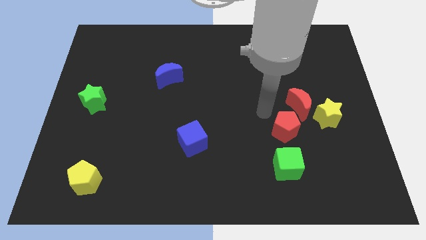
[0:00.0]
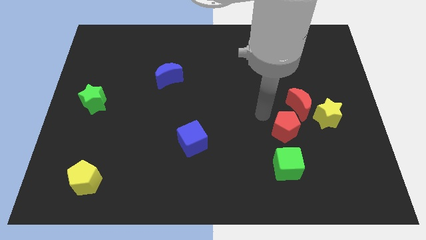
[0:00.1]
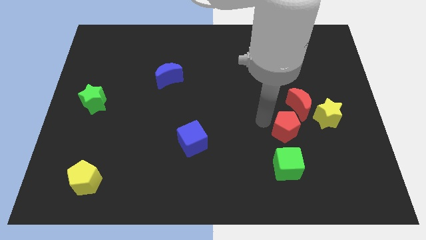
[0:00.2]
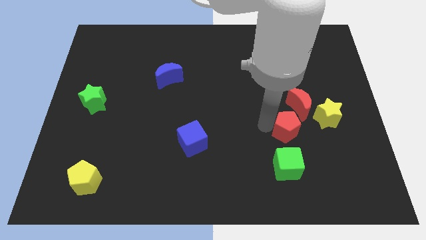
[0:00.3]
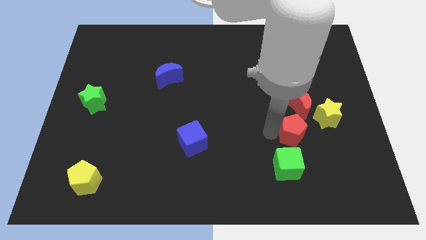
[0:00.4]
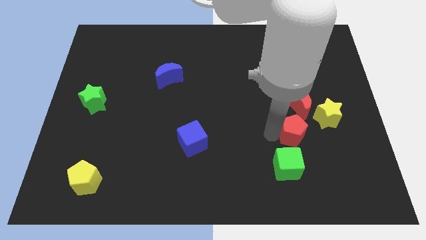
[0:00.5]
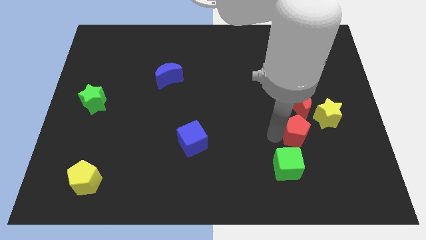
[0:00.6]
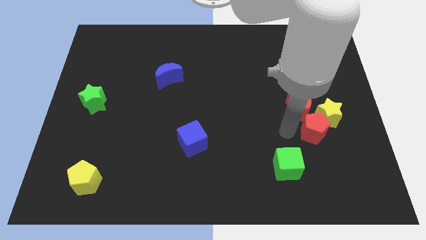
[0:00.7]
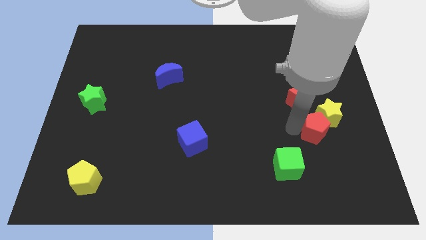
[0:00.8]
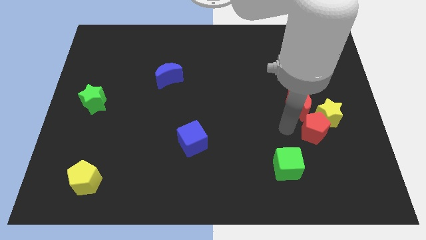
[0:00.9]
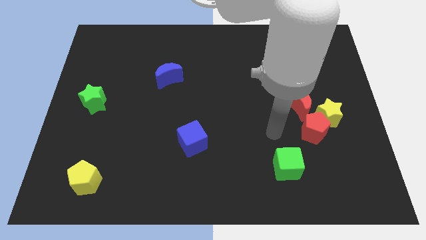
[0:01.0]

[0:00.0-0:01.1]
move the red pentagon to the bottom of the red crescent on the board

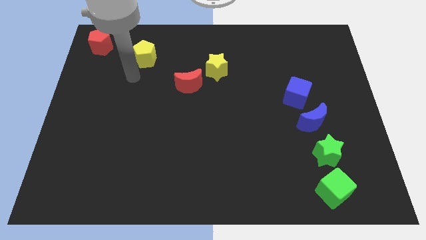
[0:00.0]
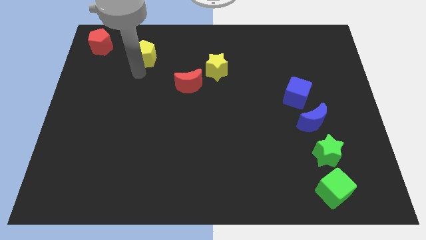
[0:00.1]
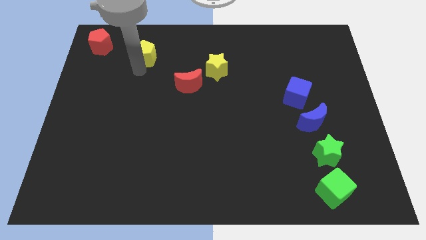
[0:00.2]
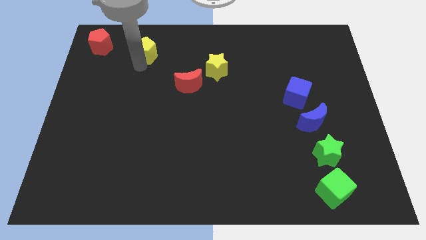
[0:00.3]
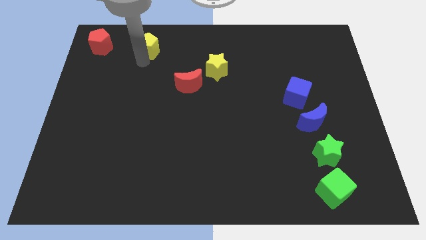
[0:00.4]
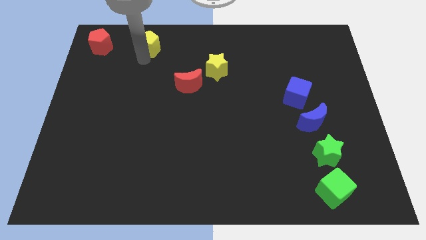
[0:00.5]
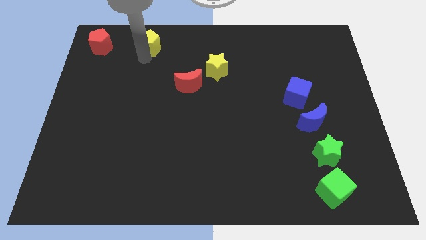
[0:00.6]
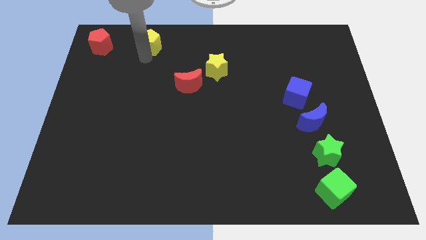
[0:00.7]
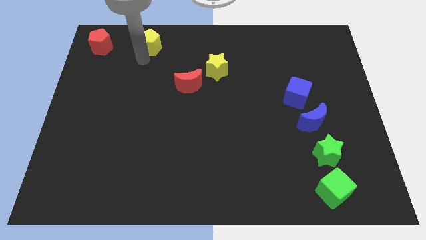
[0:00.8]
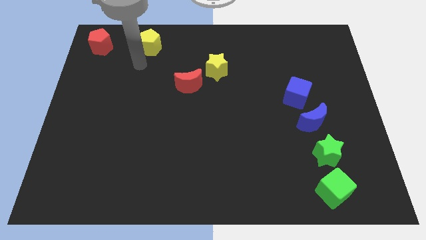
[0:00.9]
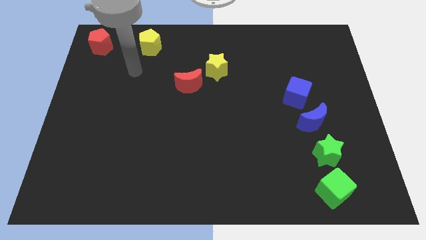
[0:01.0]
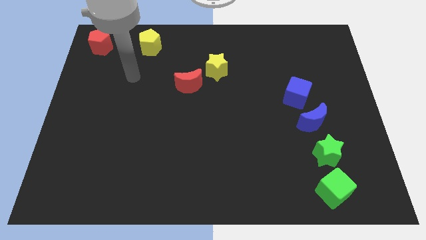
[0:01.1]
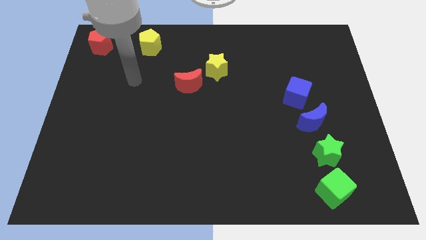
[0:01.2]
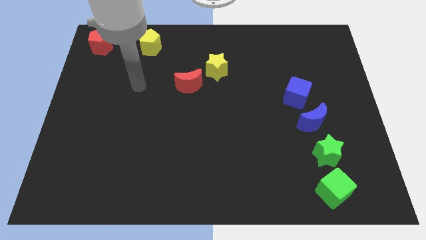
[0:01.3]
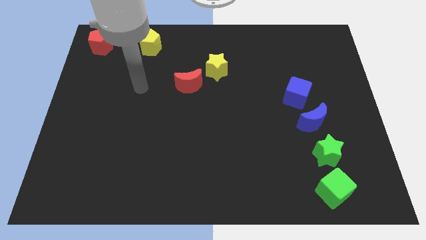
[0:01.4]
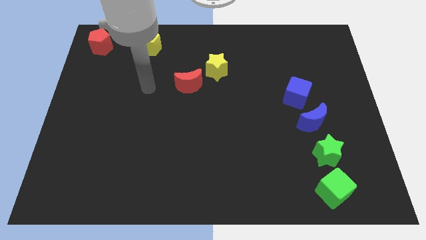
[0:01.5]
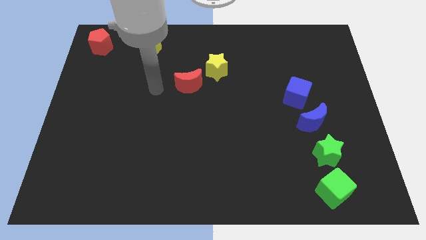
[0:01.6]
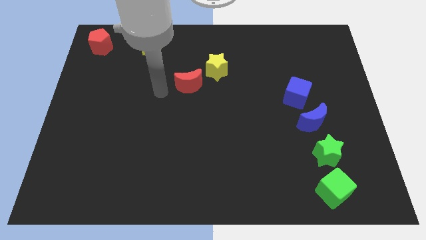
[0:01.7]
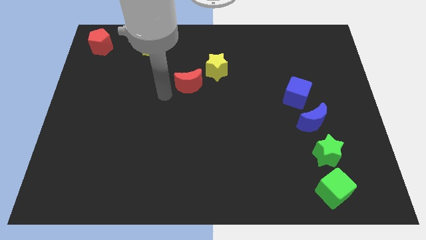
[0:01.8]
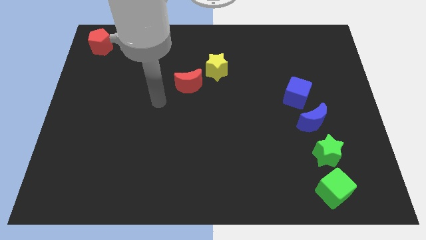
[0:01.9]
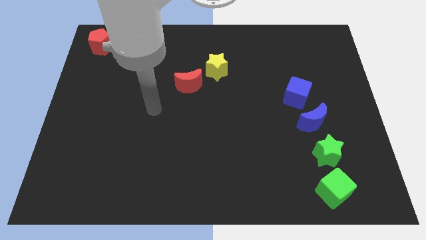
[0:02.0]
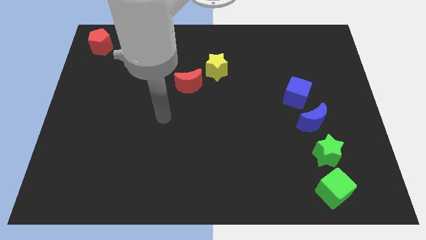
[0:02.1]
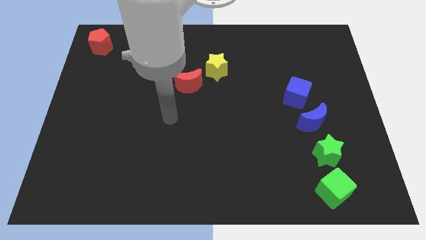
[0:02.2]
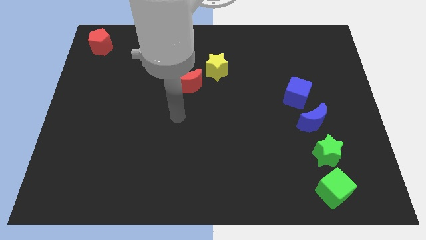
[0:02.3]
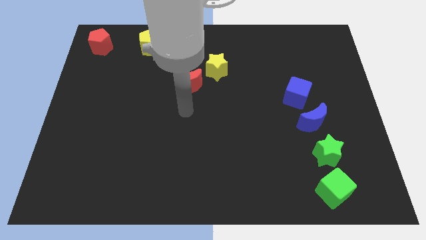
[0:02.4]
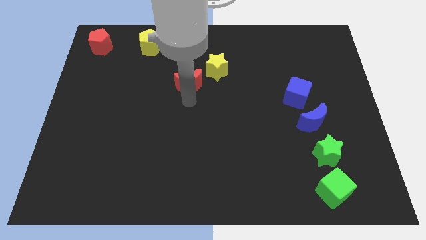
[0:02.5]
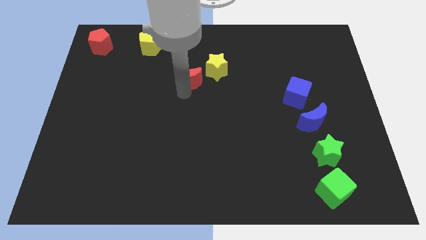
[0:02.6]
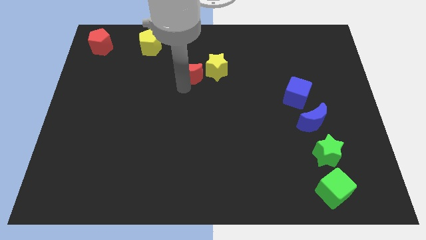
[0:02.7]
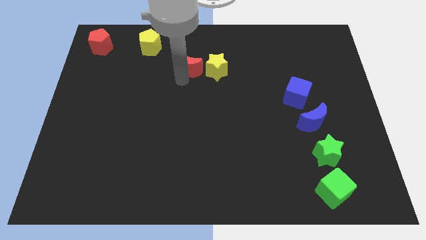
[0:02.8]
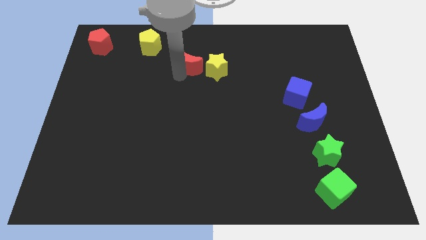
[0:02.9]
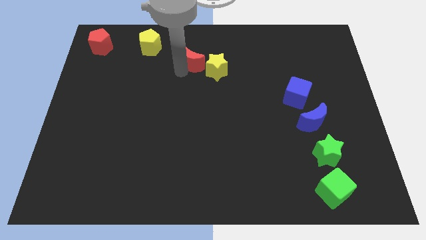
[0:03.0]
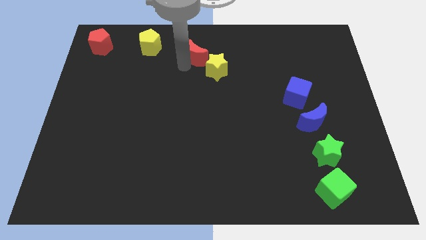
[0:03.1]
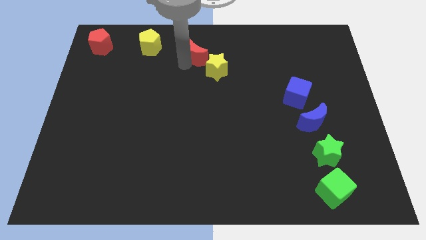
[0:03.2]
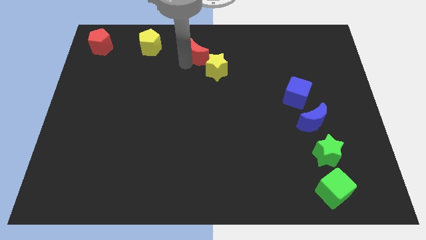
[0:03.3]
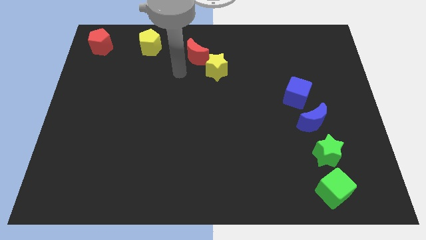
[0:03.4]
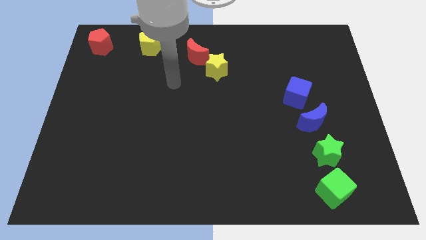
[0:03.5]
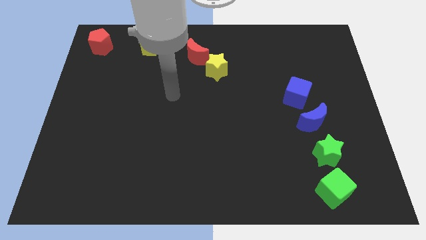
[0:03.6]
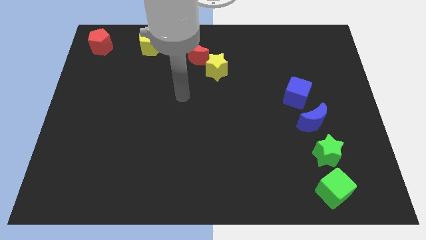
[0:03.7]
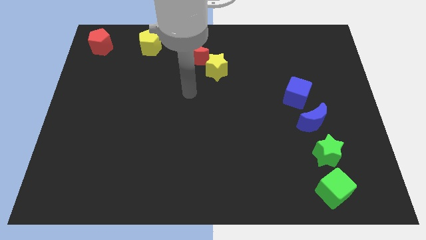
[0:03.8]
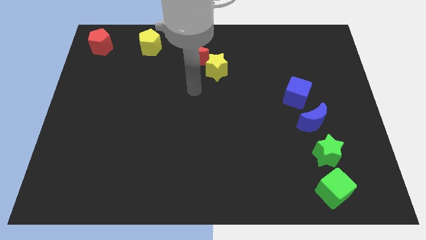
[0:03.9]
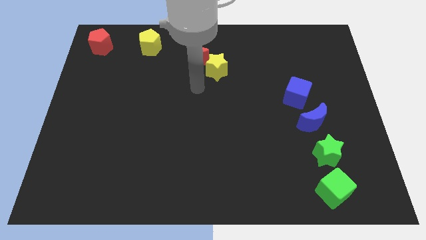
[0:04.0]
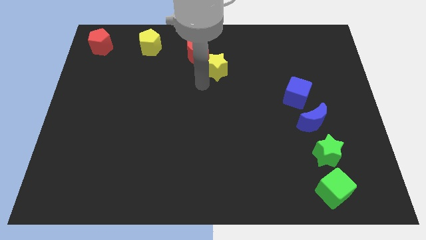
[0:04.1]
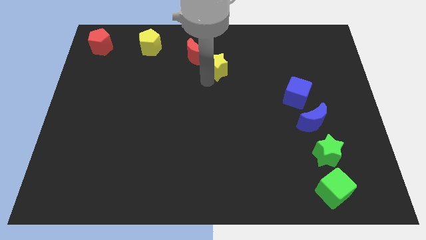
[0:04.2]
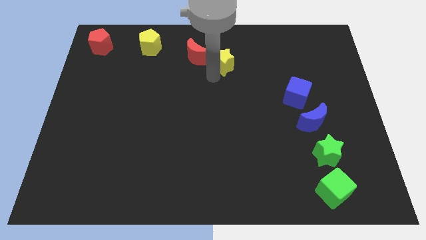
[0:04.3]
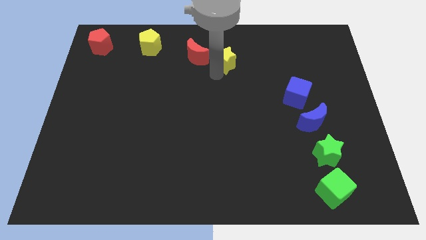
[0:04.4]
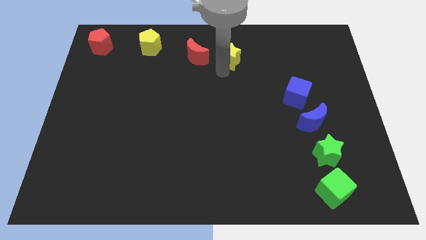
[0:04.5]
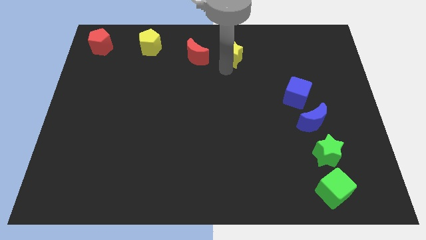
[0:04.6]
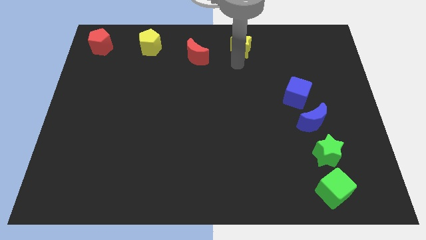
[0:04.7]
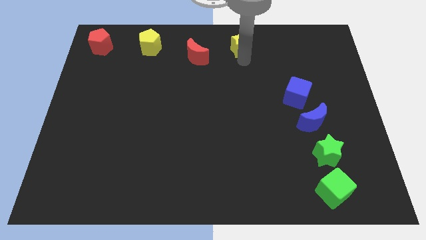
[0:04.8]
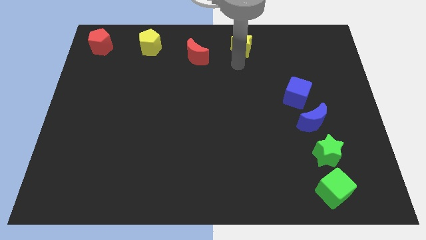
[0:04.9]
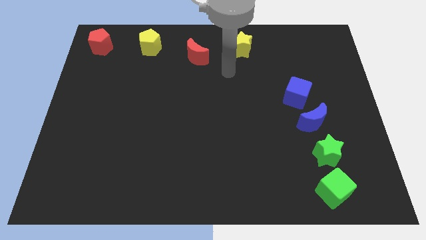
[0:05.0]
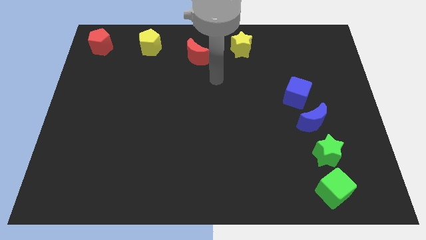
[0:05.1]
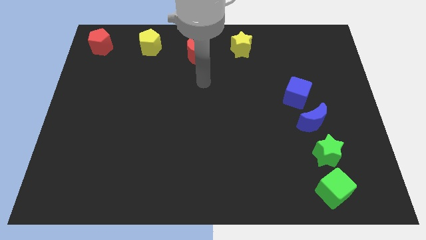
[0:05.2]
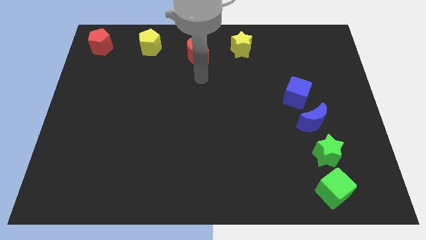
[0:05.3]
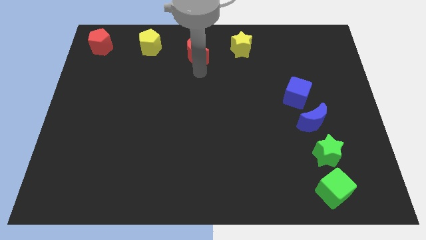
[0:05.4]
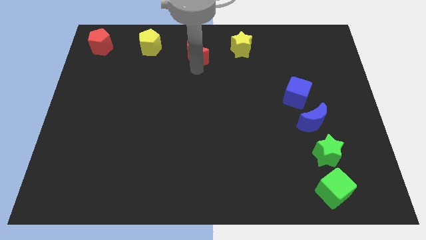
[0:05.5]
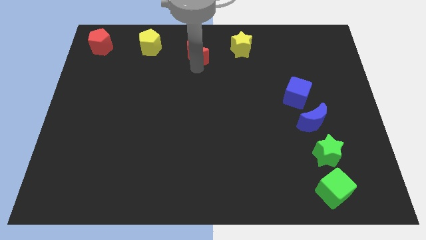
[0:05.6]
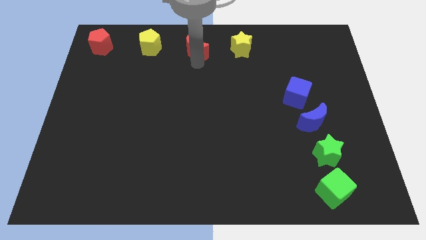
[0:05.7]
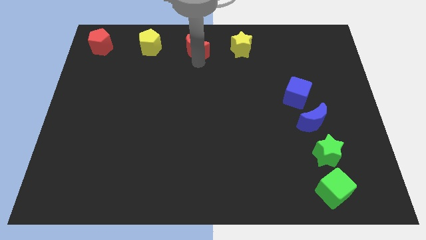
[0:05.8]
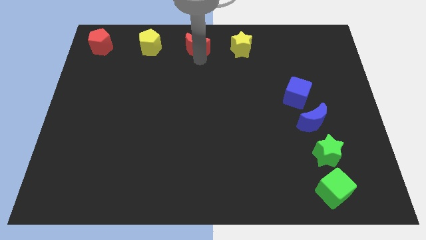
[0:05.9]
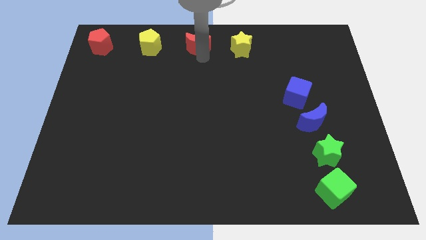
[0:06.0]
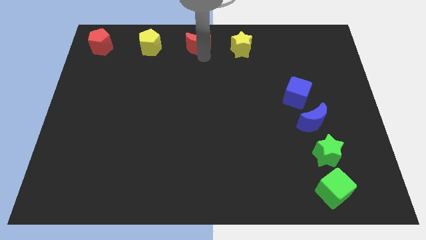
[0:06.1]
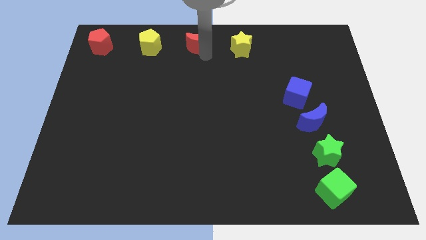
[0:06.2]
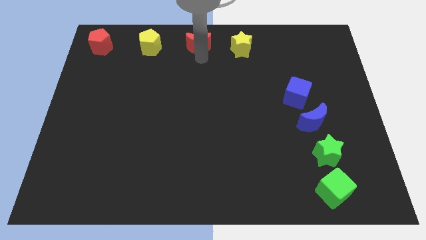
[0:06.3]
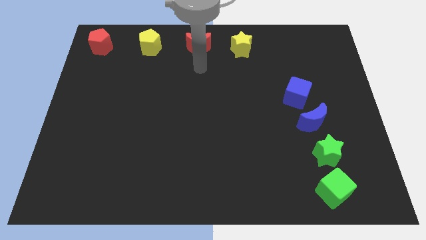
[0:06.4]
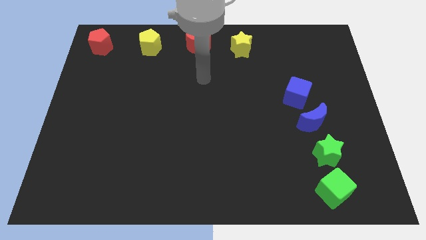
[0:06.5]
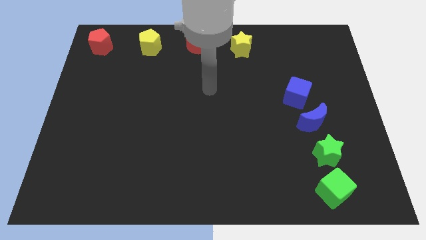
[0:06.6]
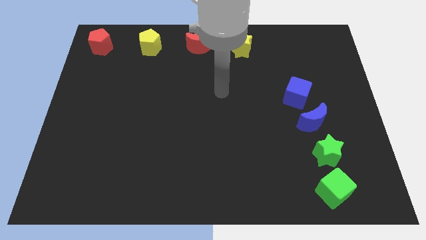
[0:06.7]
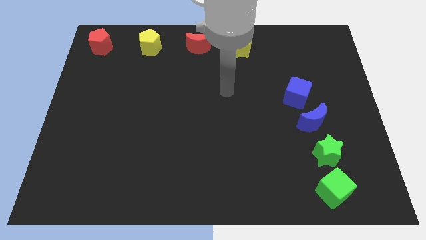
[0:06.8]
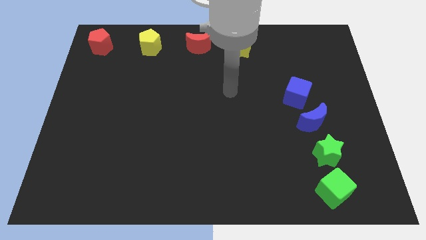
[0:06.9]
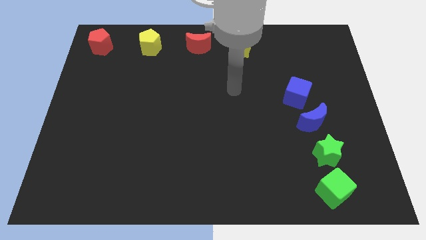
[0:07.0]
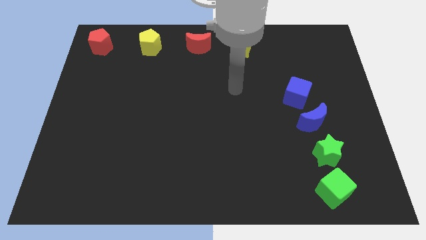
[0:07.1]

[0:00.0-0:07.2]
make a horizontal line with the red and yellow blocks

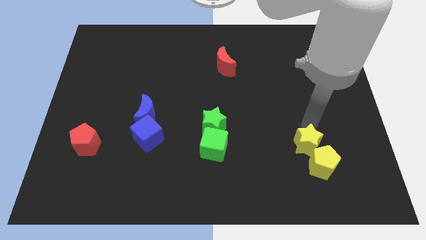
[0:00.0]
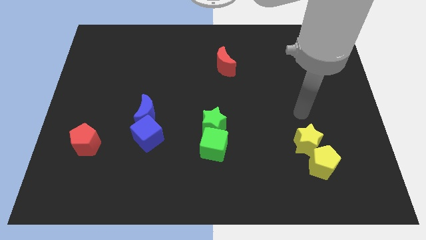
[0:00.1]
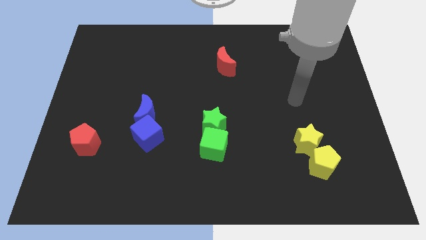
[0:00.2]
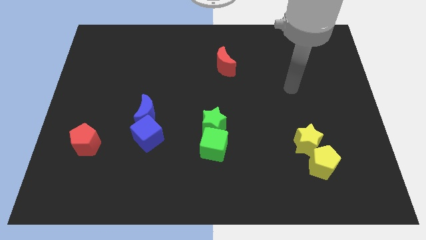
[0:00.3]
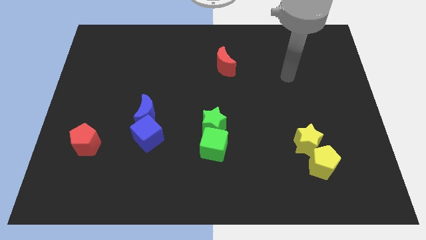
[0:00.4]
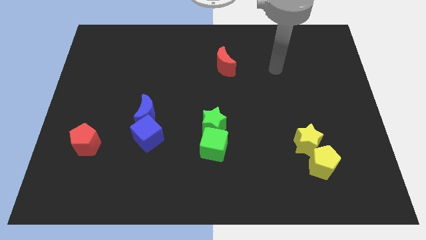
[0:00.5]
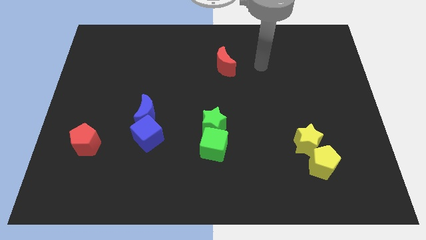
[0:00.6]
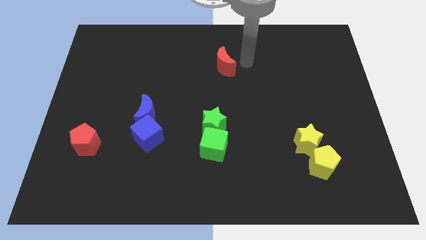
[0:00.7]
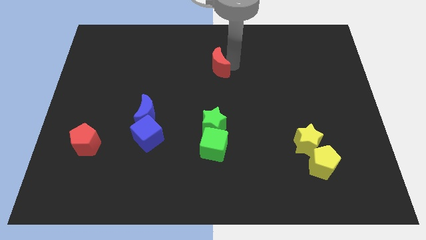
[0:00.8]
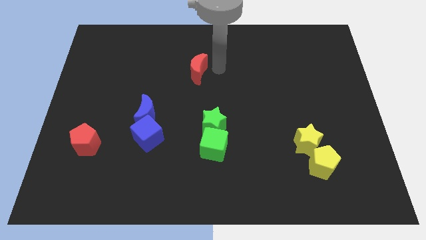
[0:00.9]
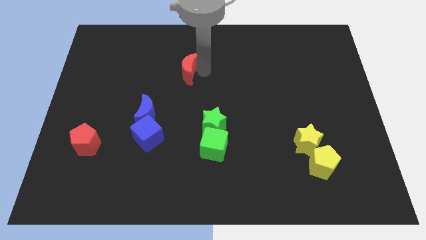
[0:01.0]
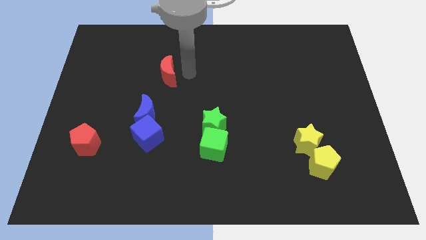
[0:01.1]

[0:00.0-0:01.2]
slide the red moon to the left
